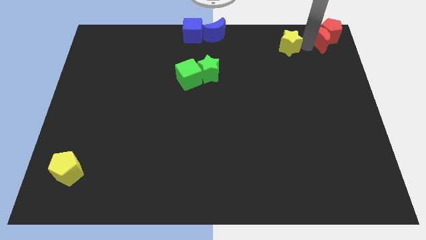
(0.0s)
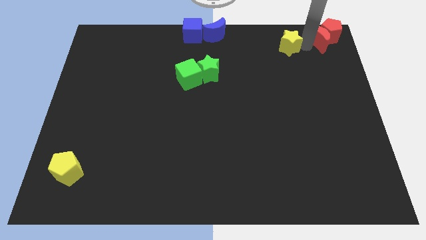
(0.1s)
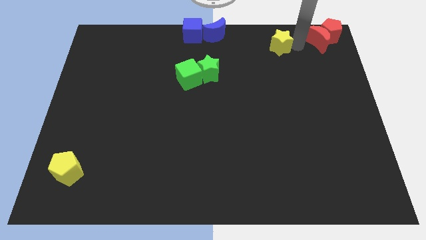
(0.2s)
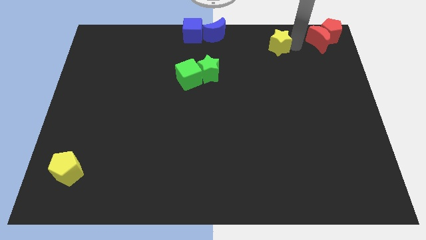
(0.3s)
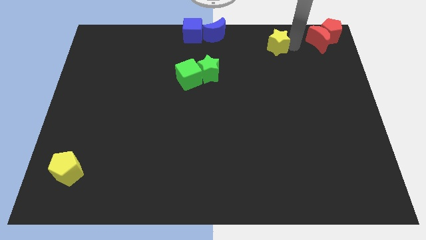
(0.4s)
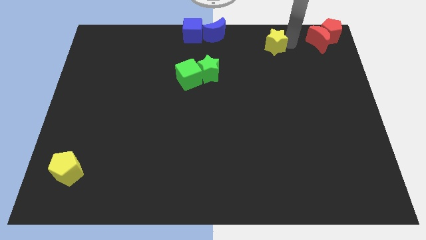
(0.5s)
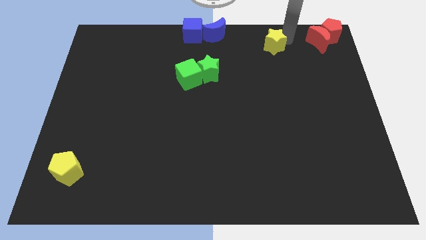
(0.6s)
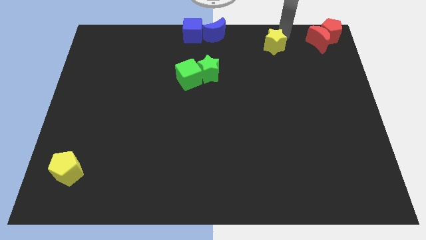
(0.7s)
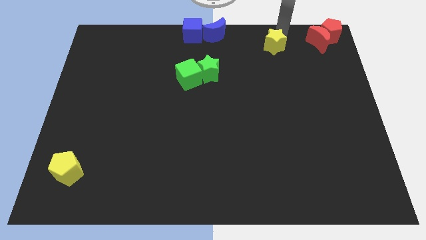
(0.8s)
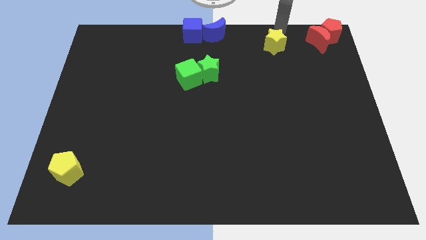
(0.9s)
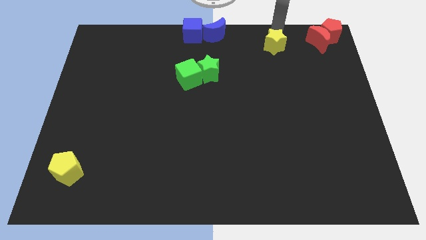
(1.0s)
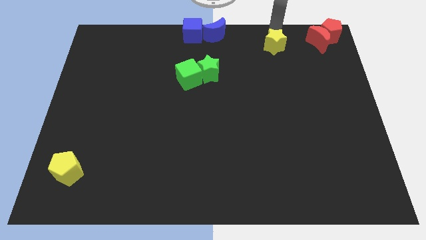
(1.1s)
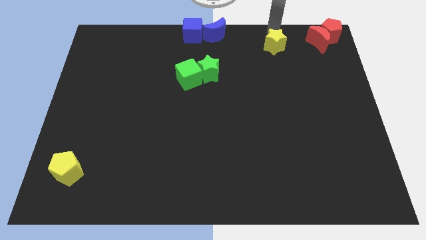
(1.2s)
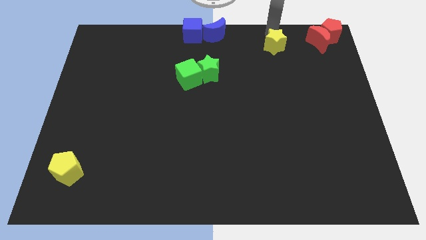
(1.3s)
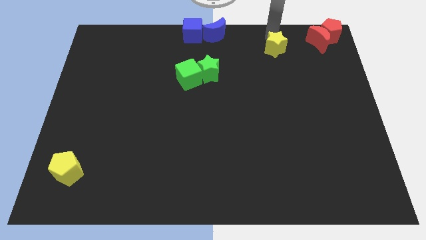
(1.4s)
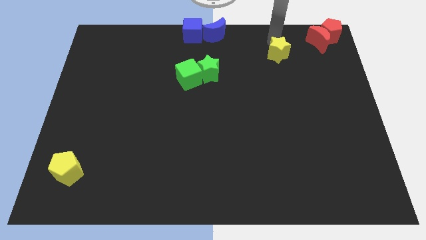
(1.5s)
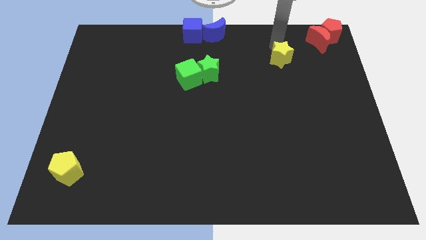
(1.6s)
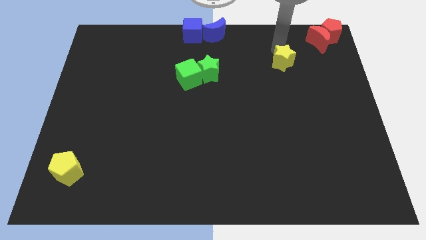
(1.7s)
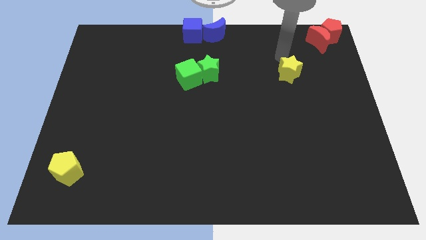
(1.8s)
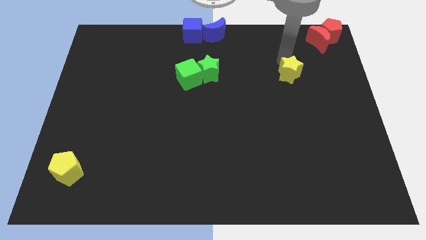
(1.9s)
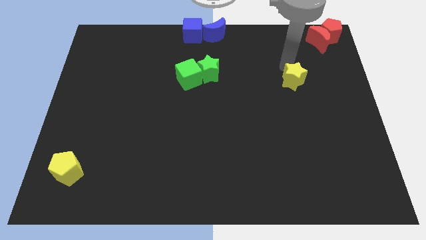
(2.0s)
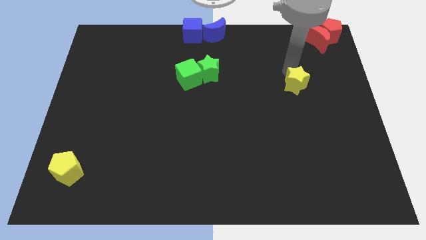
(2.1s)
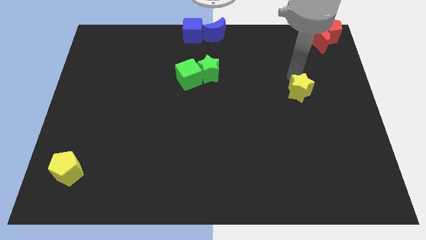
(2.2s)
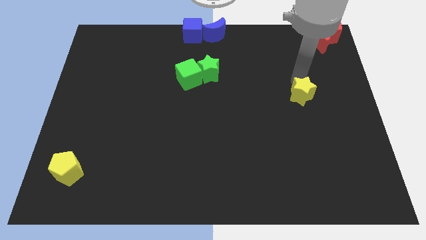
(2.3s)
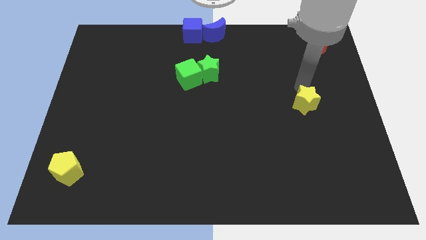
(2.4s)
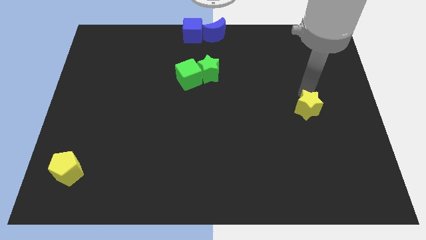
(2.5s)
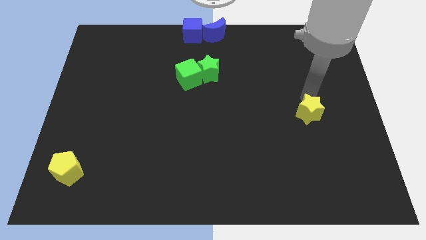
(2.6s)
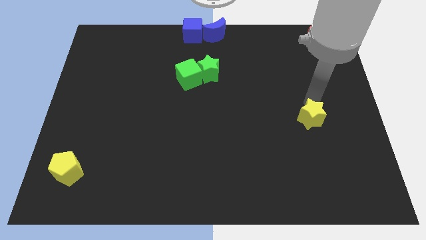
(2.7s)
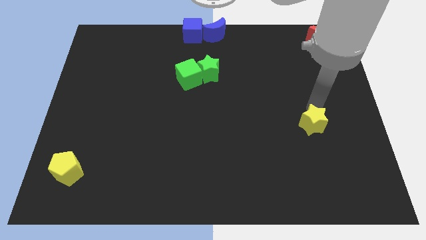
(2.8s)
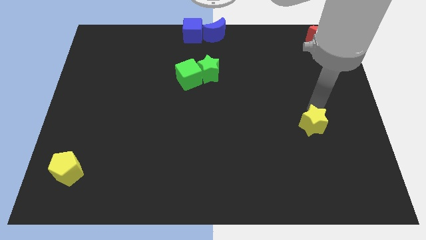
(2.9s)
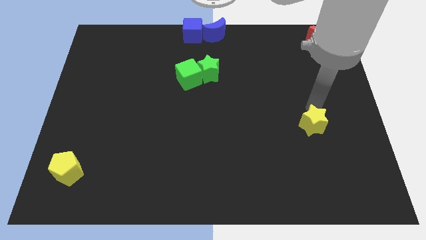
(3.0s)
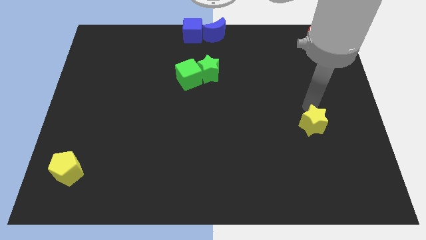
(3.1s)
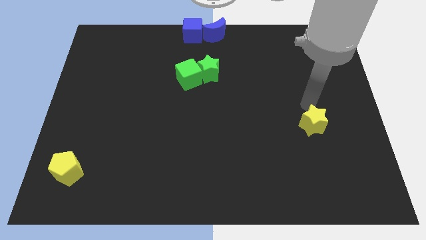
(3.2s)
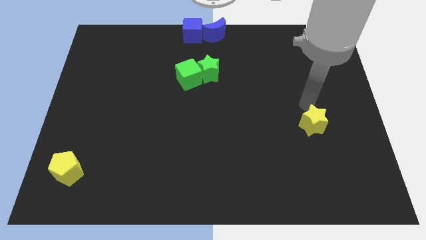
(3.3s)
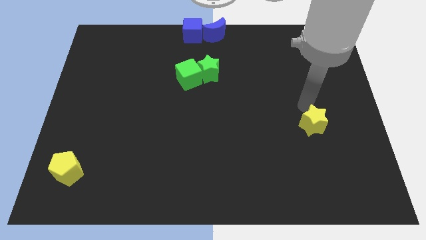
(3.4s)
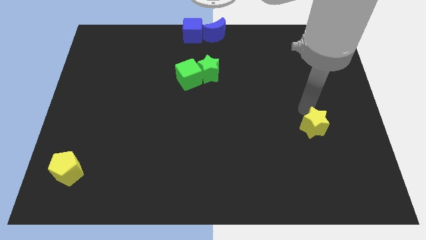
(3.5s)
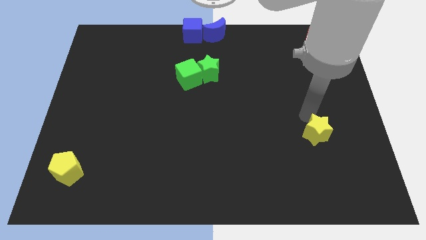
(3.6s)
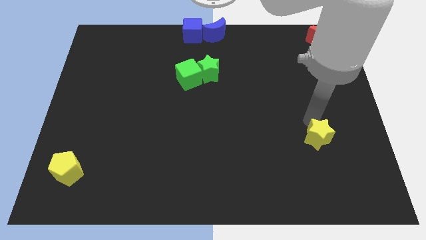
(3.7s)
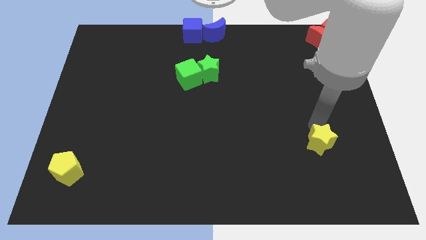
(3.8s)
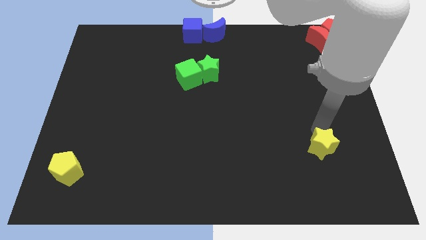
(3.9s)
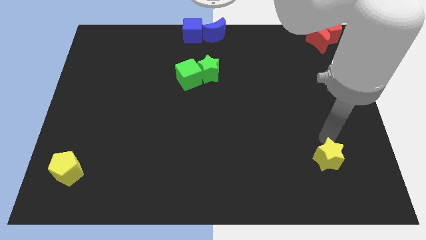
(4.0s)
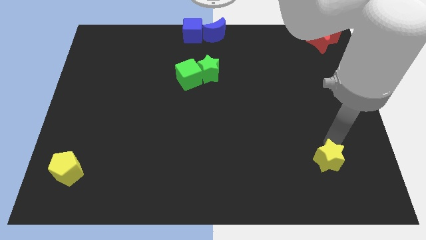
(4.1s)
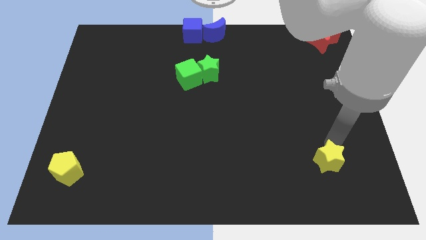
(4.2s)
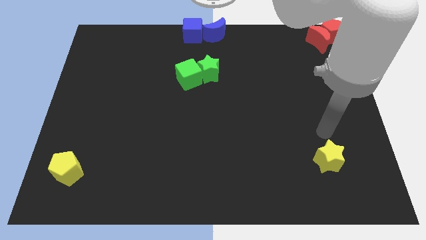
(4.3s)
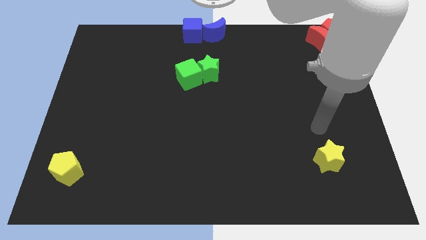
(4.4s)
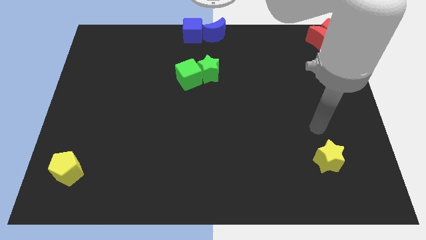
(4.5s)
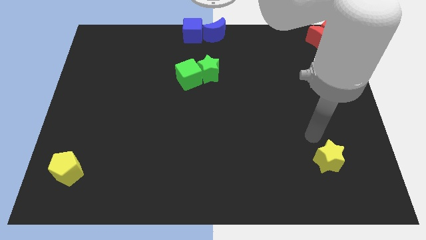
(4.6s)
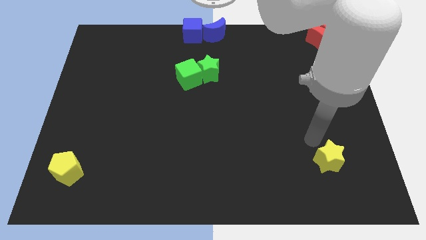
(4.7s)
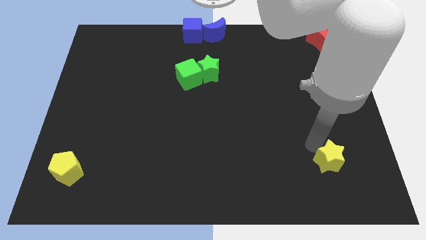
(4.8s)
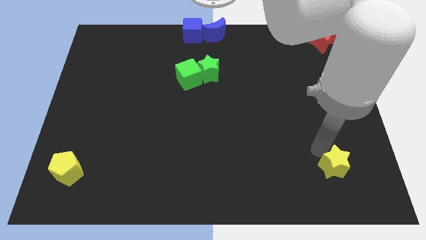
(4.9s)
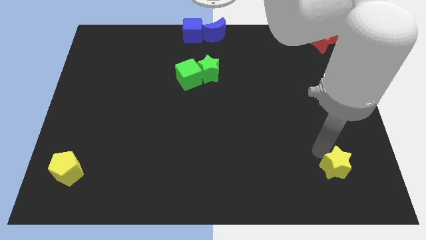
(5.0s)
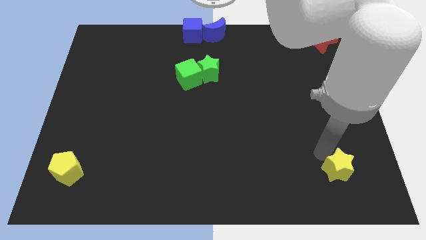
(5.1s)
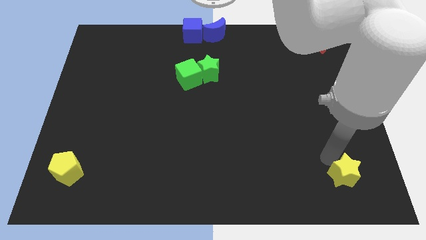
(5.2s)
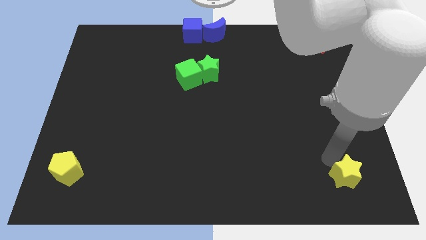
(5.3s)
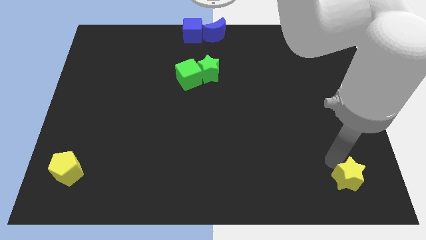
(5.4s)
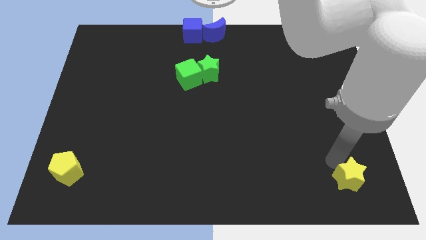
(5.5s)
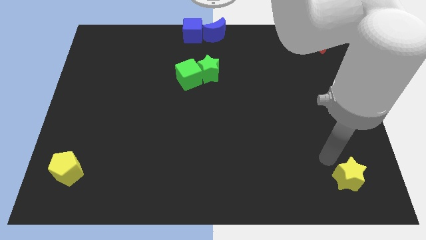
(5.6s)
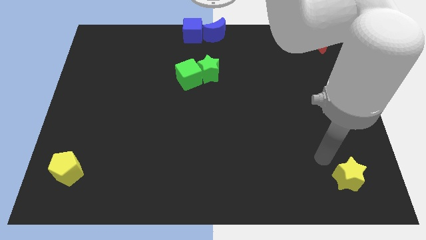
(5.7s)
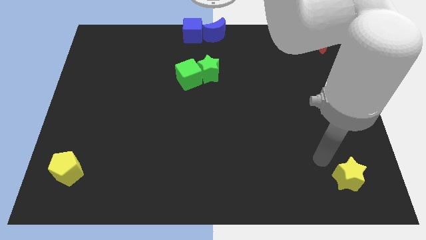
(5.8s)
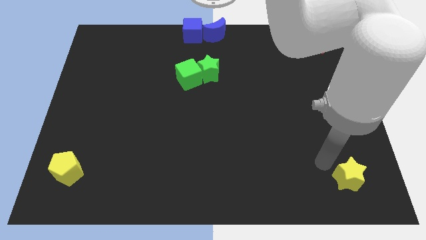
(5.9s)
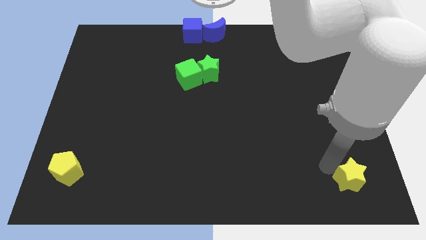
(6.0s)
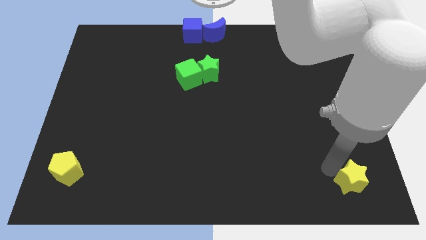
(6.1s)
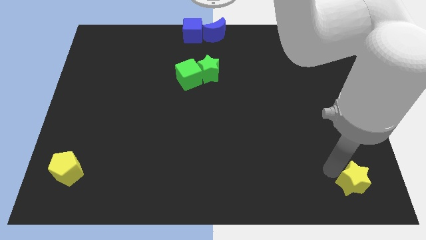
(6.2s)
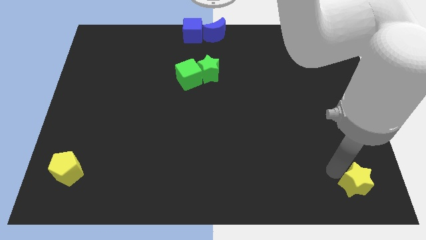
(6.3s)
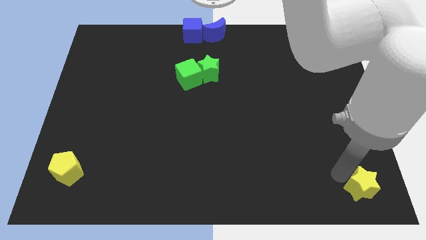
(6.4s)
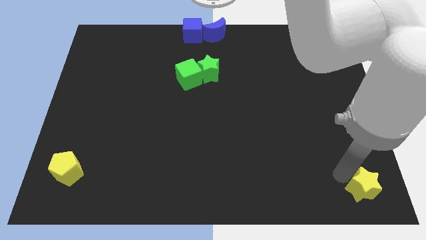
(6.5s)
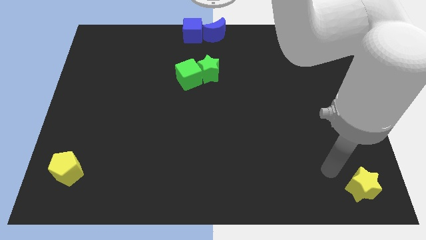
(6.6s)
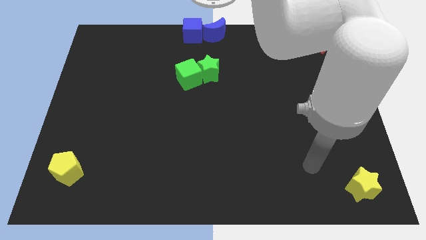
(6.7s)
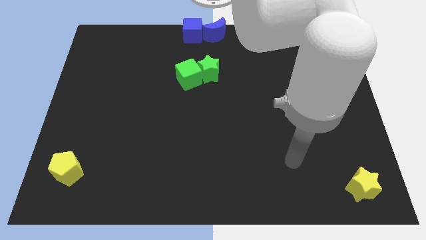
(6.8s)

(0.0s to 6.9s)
move the yellow star to the bottom right of the board

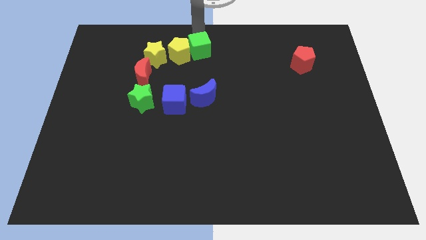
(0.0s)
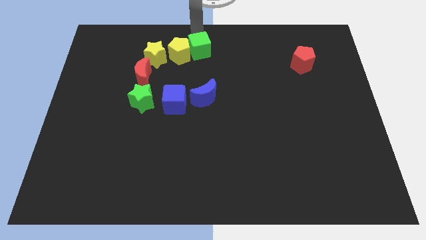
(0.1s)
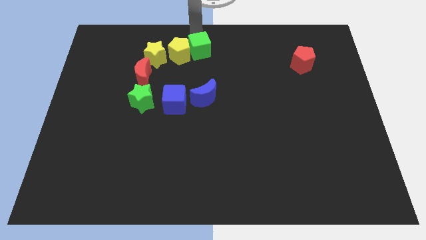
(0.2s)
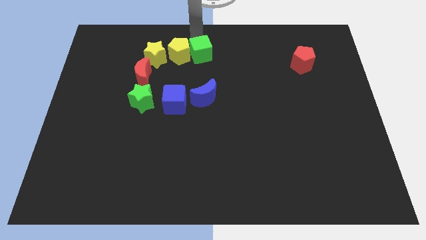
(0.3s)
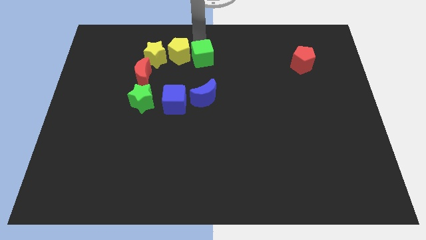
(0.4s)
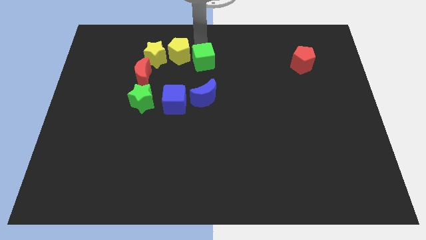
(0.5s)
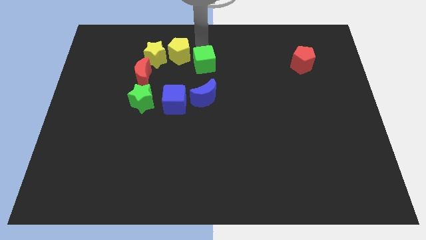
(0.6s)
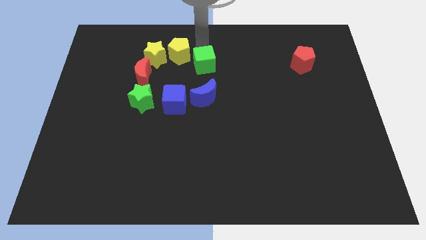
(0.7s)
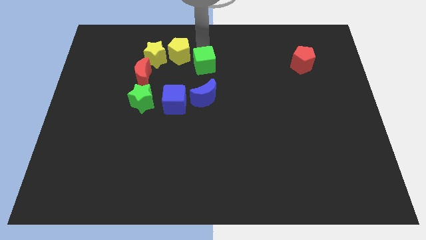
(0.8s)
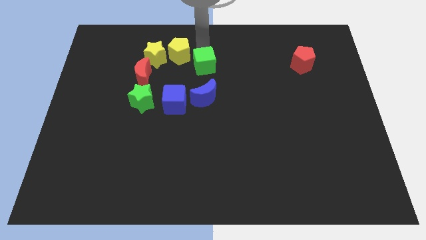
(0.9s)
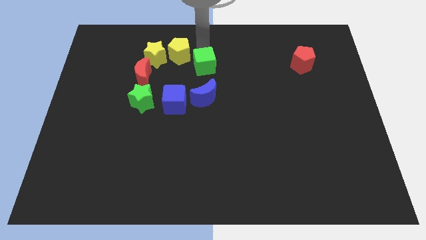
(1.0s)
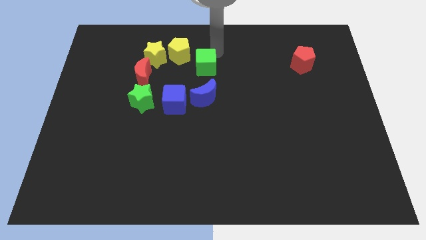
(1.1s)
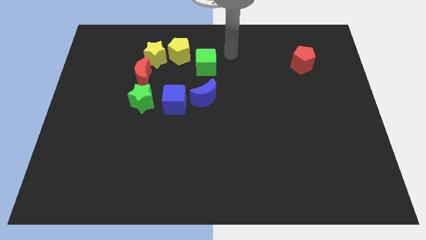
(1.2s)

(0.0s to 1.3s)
move the green cube towards the top of the blue moon

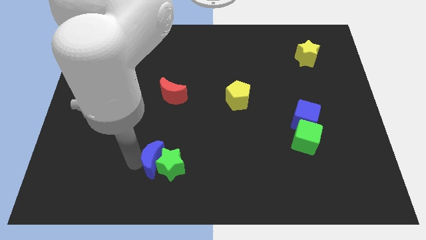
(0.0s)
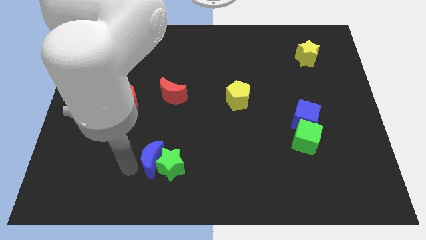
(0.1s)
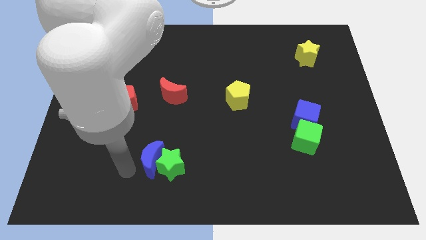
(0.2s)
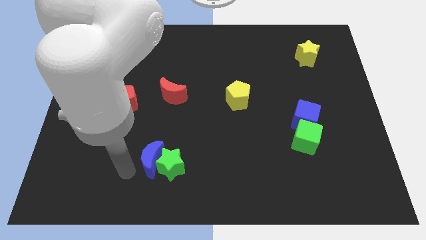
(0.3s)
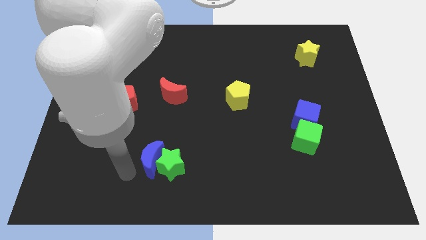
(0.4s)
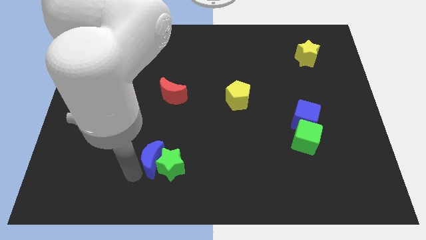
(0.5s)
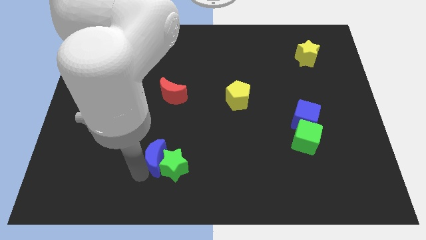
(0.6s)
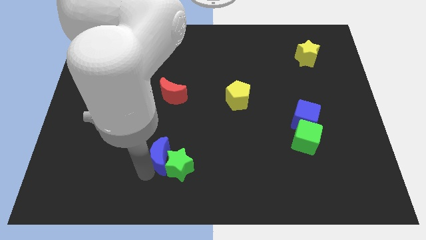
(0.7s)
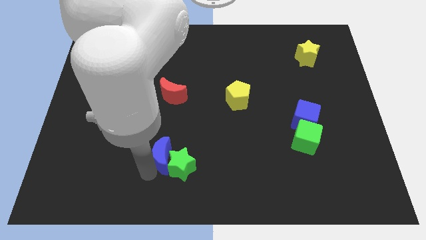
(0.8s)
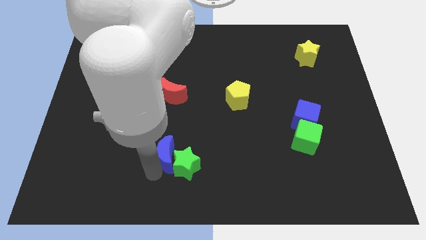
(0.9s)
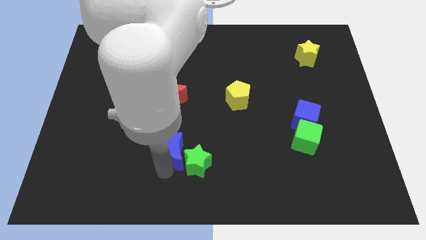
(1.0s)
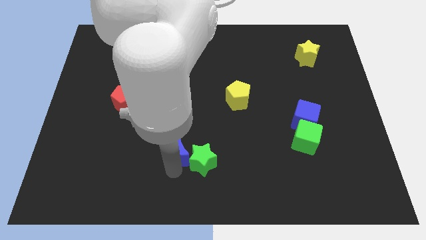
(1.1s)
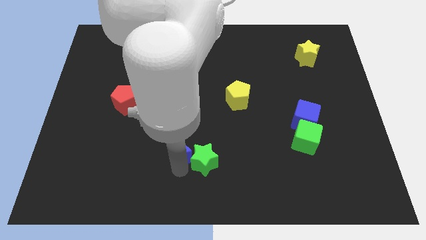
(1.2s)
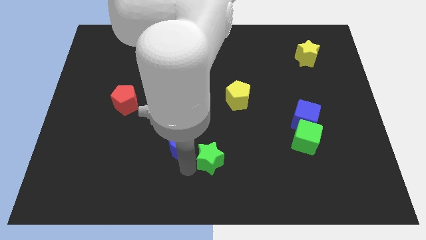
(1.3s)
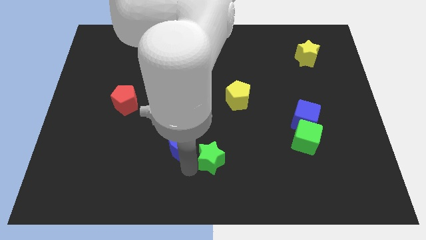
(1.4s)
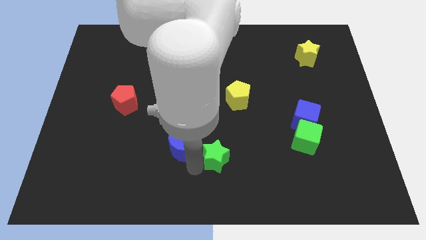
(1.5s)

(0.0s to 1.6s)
separate the green star from the blue moon
